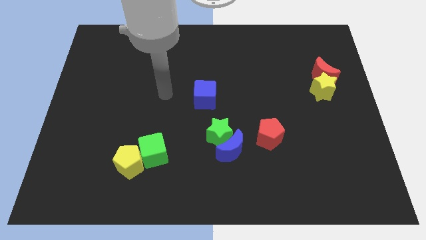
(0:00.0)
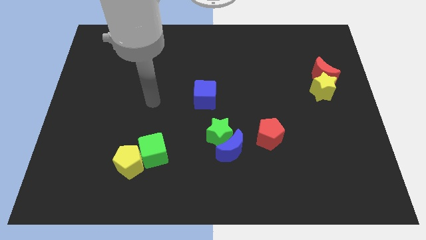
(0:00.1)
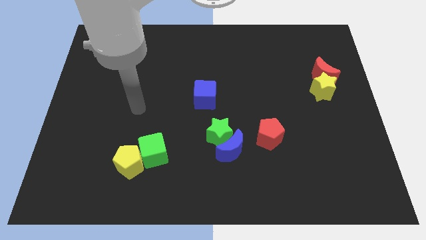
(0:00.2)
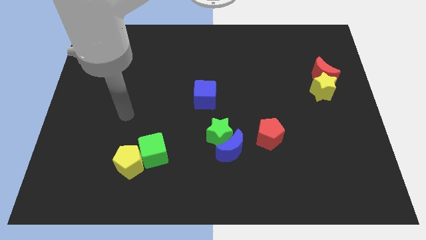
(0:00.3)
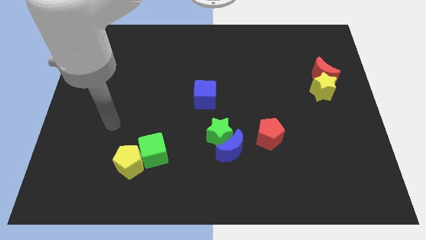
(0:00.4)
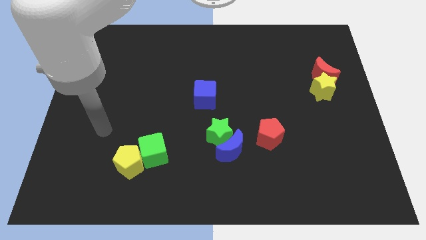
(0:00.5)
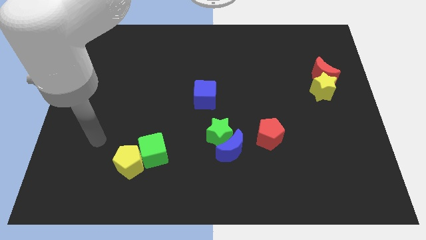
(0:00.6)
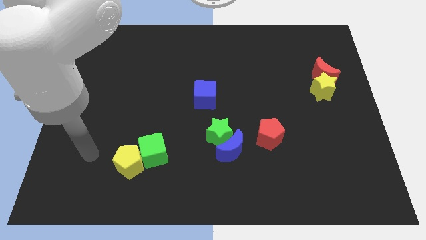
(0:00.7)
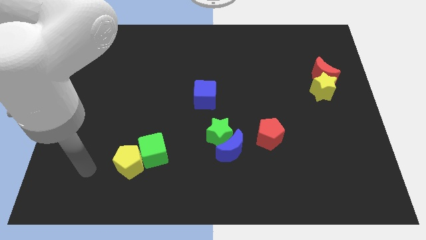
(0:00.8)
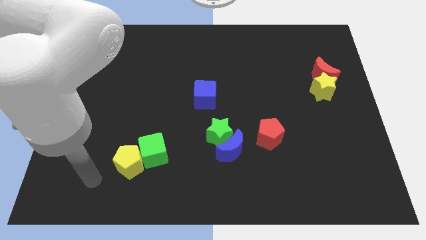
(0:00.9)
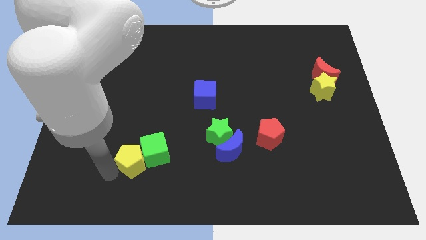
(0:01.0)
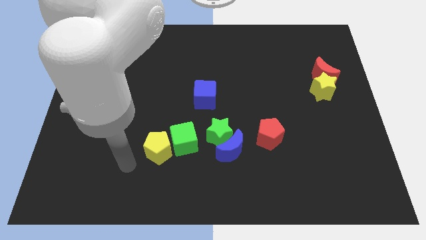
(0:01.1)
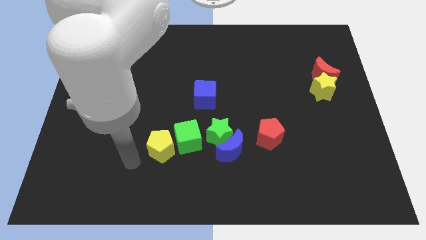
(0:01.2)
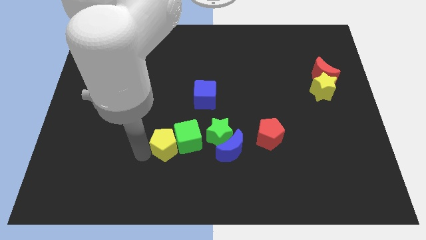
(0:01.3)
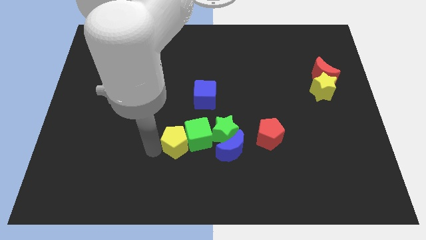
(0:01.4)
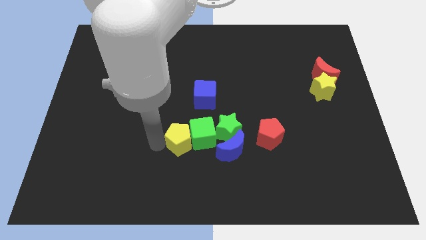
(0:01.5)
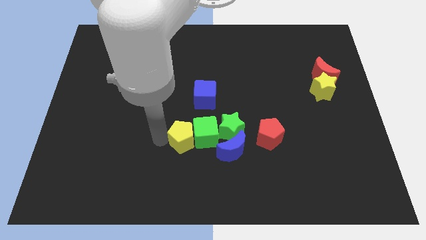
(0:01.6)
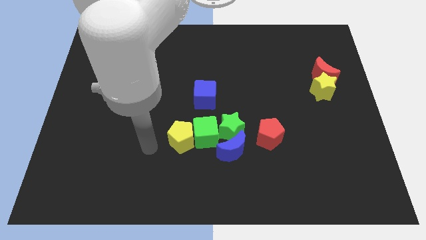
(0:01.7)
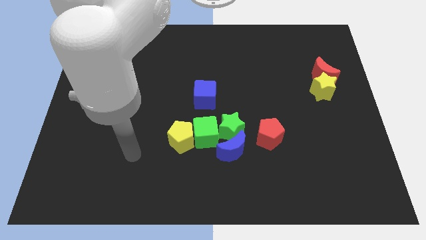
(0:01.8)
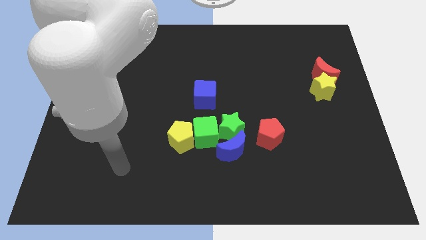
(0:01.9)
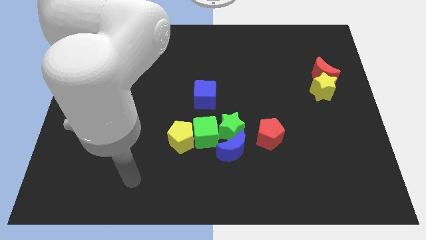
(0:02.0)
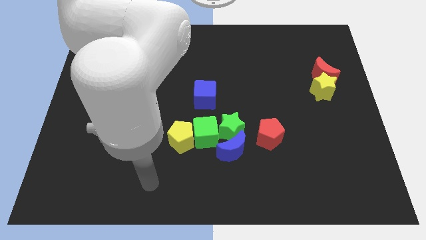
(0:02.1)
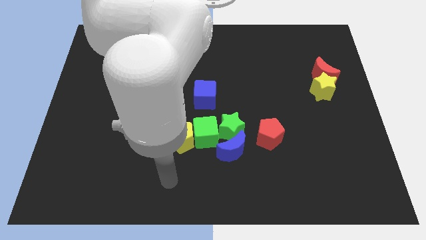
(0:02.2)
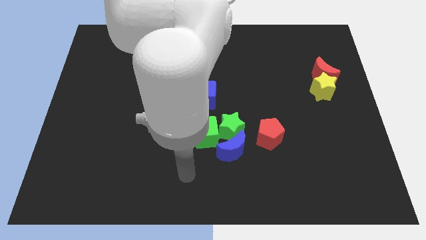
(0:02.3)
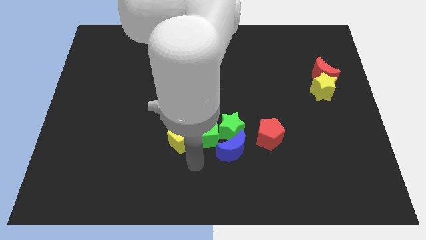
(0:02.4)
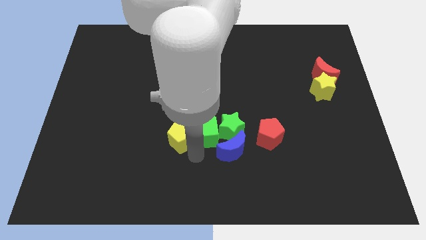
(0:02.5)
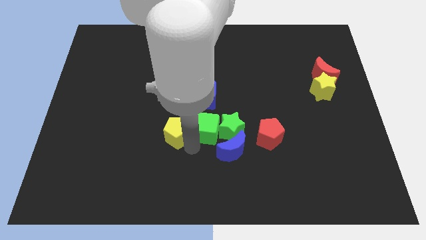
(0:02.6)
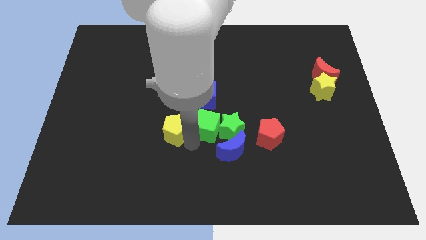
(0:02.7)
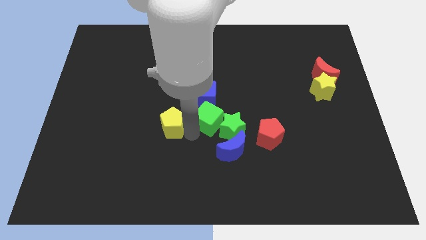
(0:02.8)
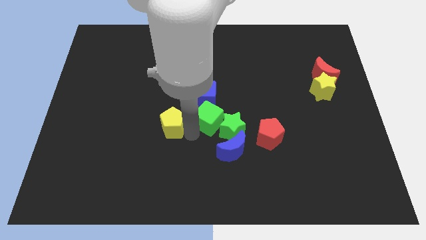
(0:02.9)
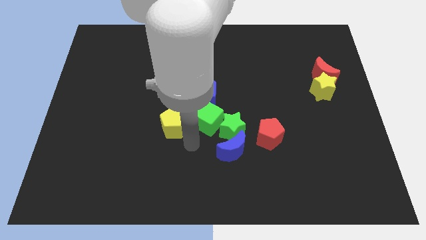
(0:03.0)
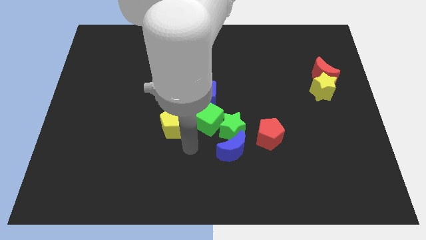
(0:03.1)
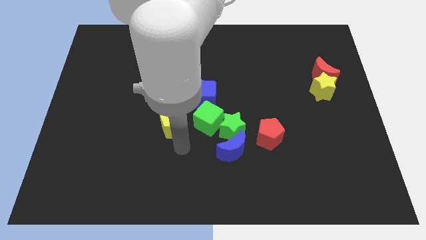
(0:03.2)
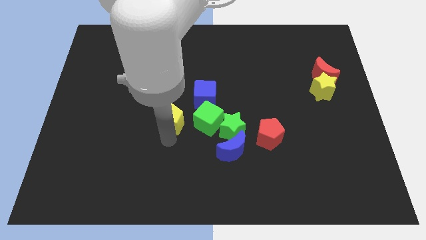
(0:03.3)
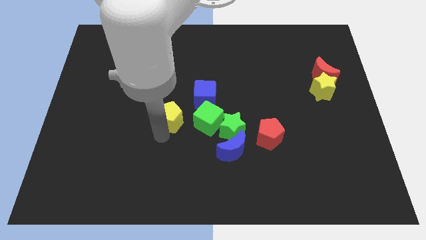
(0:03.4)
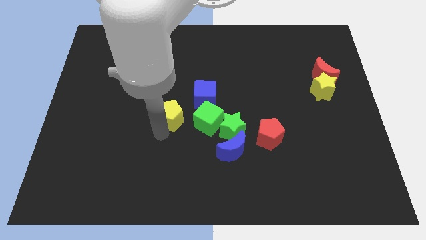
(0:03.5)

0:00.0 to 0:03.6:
place the green blocks in between the blue blocks

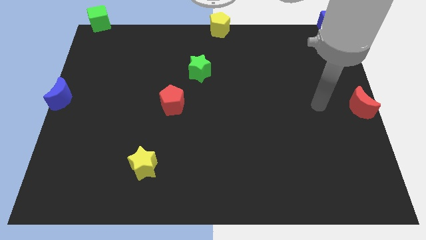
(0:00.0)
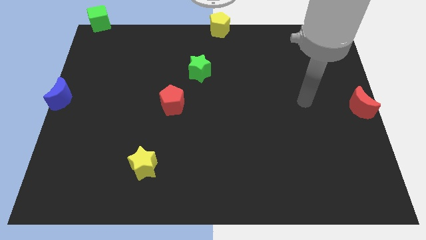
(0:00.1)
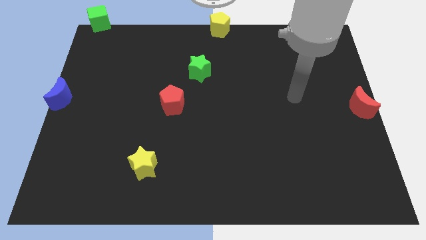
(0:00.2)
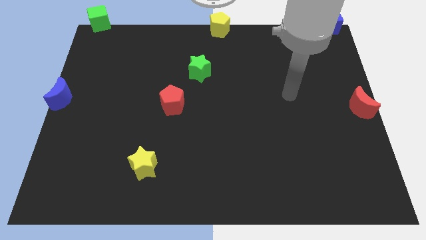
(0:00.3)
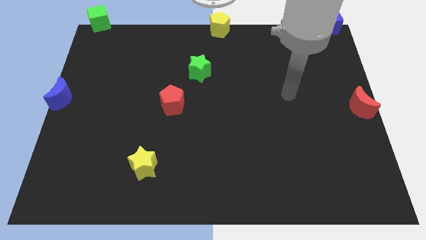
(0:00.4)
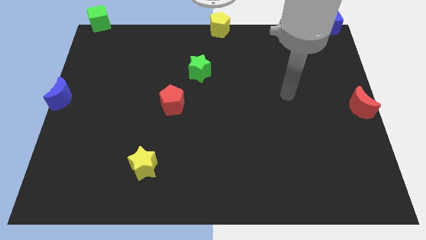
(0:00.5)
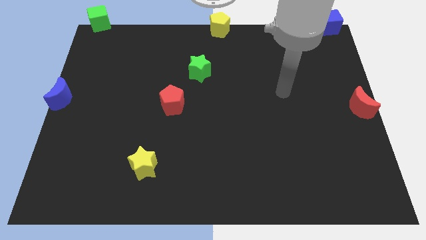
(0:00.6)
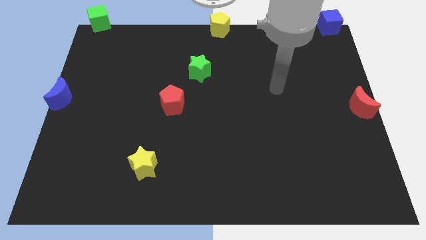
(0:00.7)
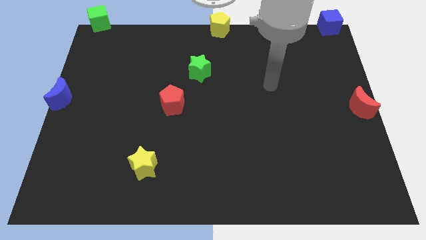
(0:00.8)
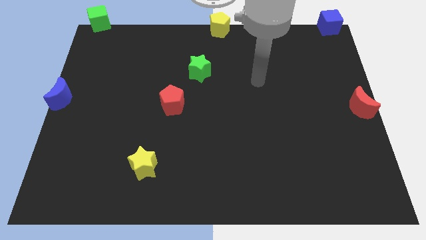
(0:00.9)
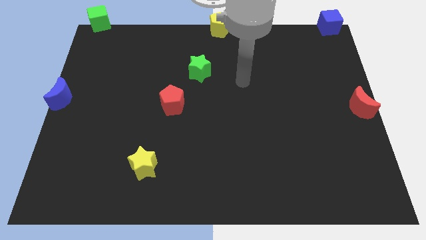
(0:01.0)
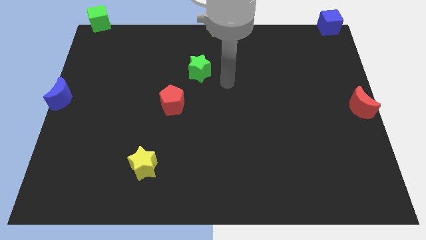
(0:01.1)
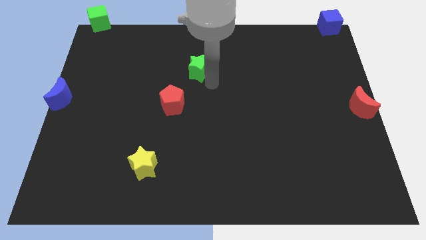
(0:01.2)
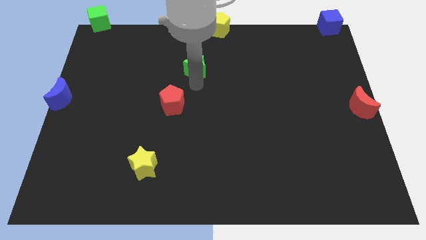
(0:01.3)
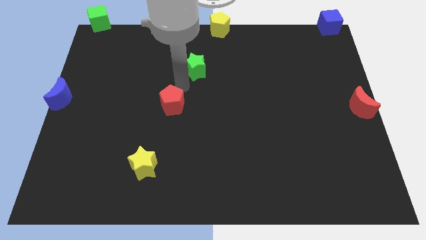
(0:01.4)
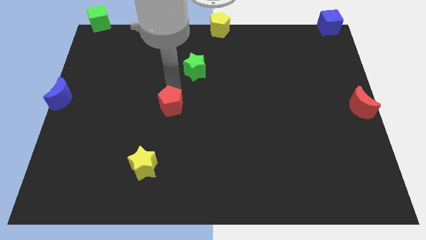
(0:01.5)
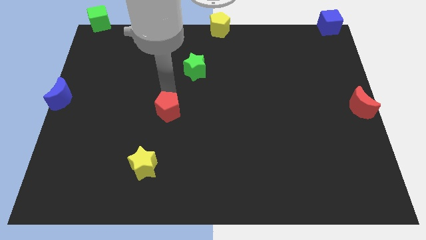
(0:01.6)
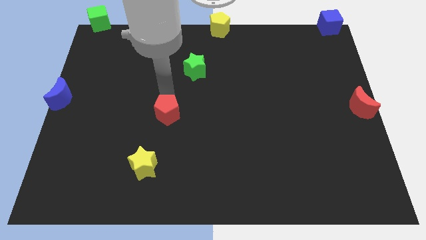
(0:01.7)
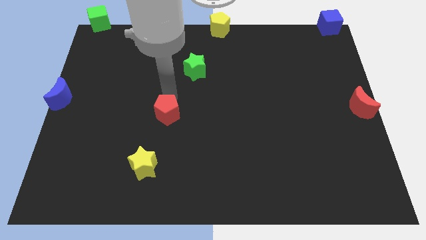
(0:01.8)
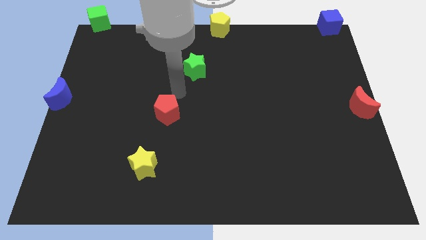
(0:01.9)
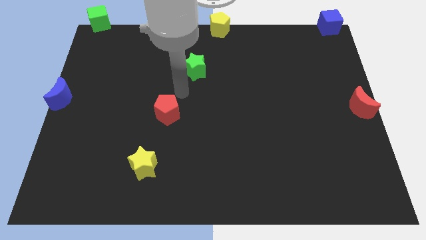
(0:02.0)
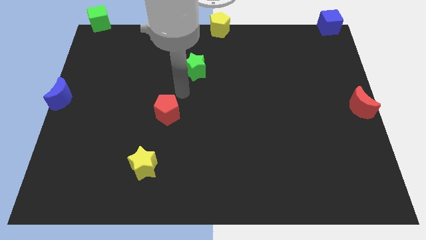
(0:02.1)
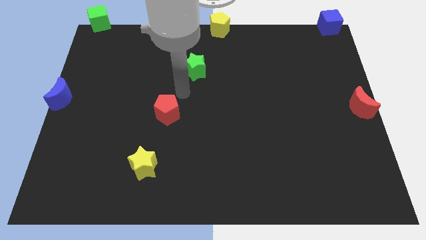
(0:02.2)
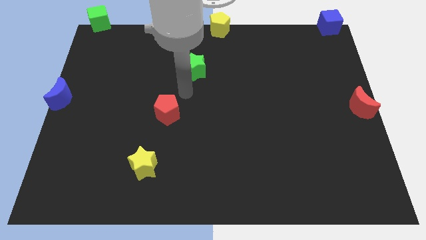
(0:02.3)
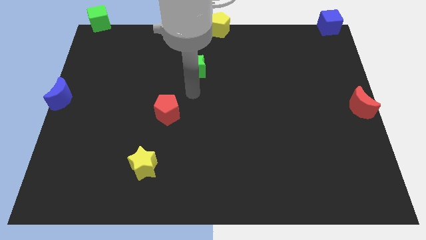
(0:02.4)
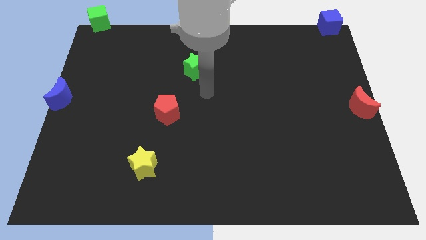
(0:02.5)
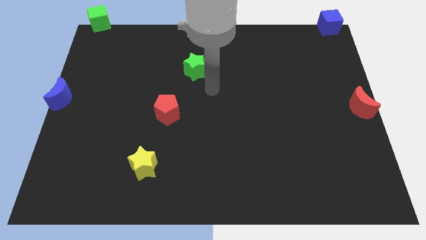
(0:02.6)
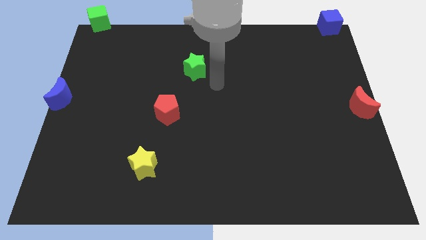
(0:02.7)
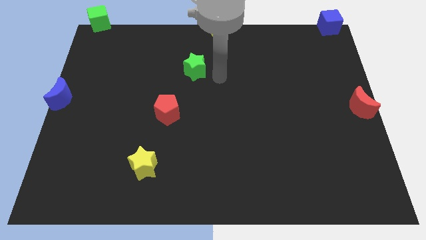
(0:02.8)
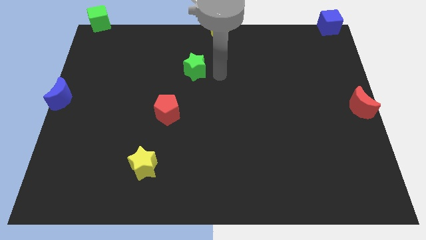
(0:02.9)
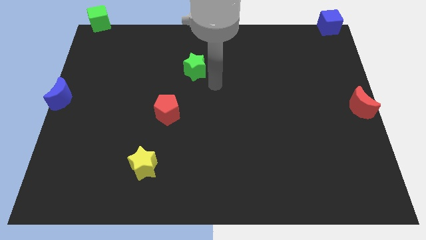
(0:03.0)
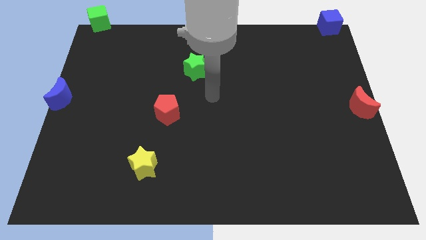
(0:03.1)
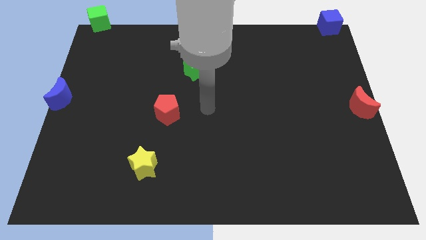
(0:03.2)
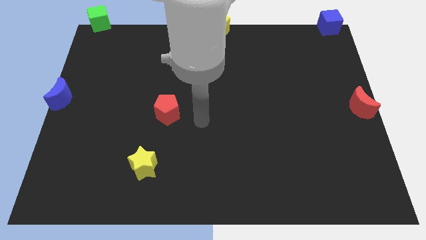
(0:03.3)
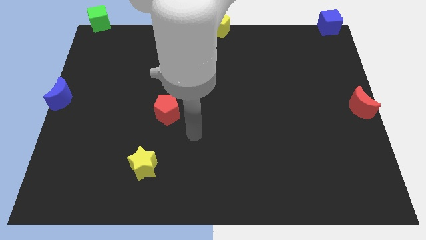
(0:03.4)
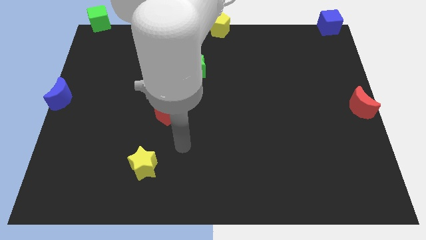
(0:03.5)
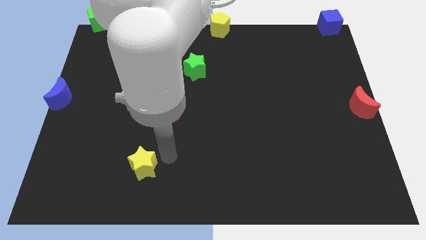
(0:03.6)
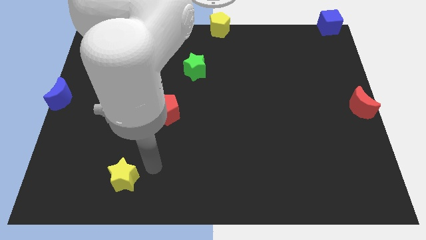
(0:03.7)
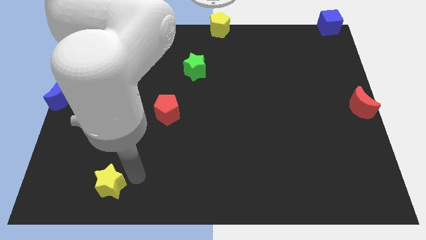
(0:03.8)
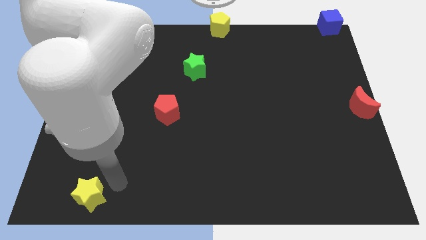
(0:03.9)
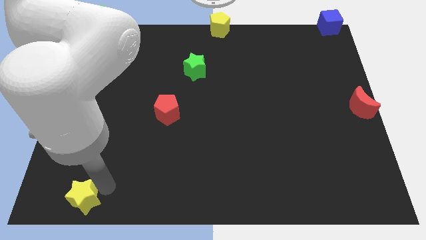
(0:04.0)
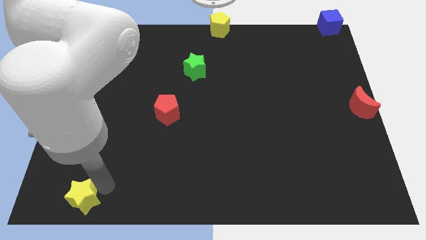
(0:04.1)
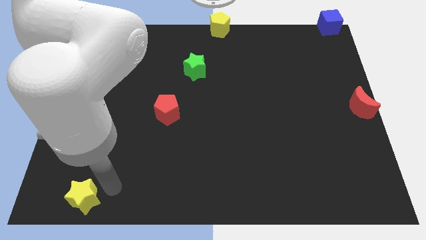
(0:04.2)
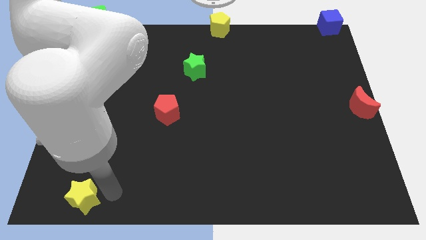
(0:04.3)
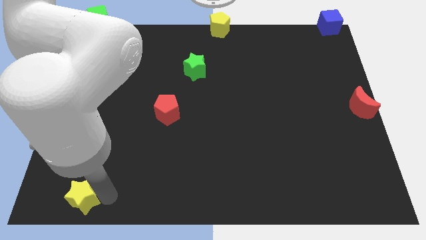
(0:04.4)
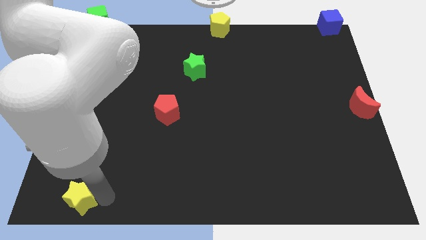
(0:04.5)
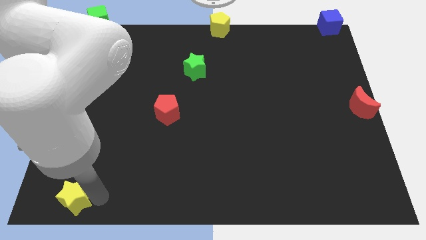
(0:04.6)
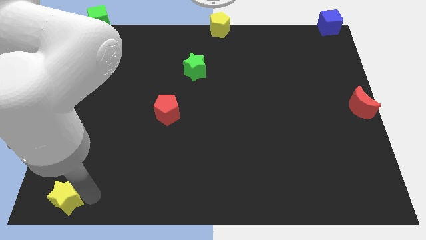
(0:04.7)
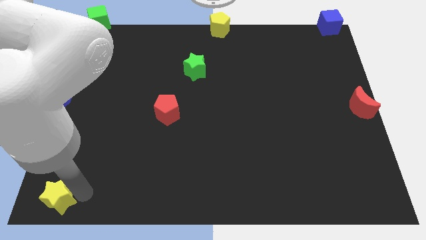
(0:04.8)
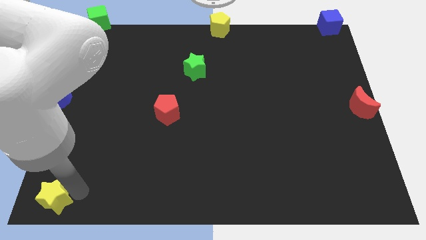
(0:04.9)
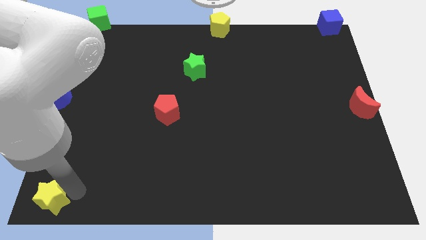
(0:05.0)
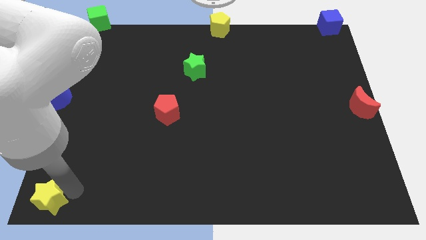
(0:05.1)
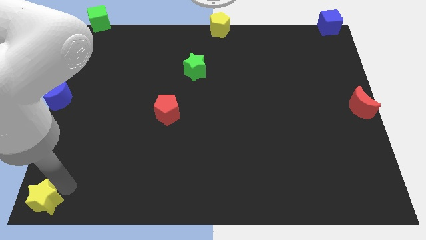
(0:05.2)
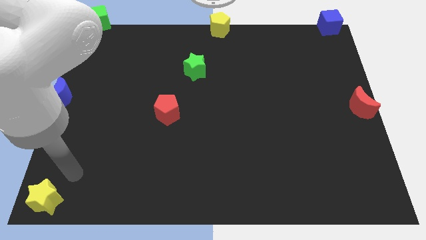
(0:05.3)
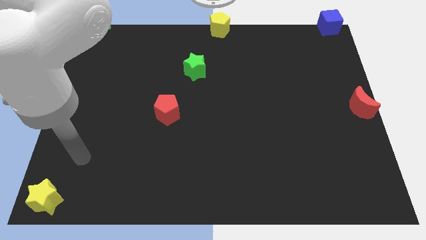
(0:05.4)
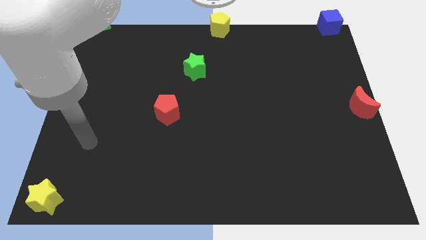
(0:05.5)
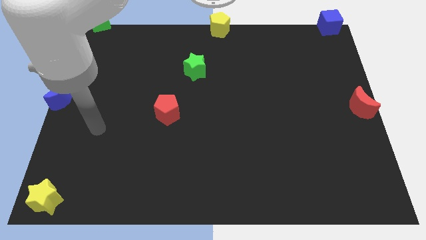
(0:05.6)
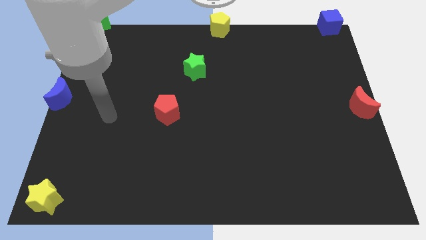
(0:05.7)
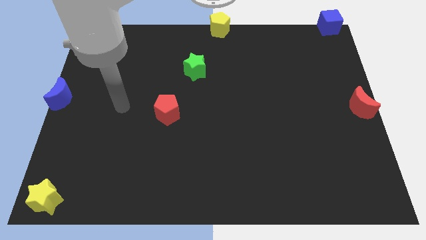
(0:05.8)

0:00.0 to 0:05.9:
place the yellow star towards the bottom left
